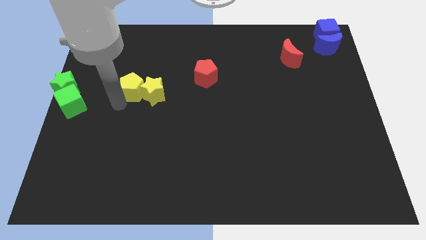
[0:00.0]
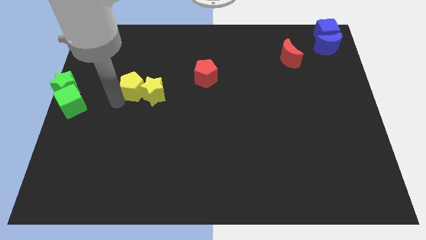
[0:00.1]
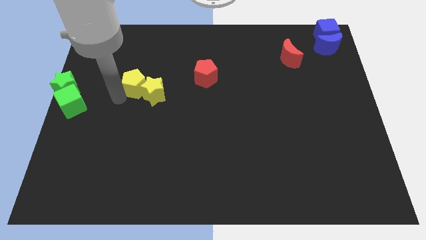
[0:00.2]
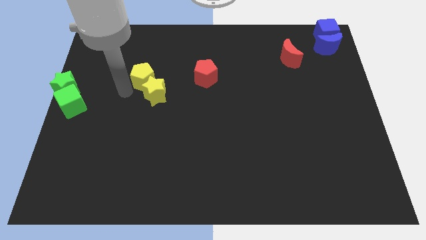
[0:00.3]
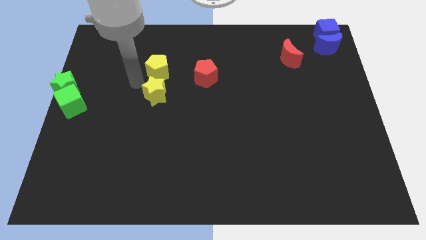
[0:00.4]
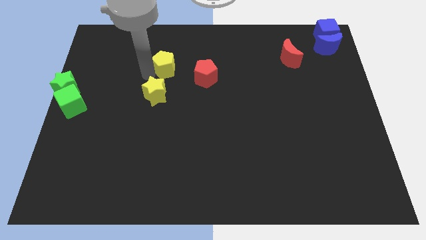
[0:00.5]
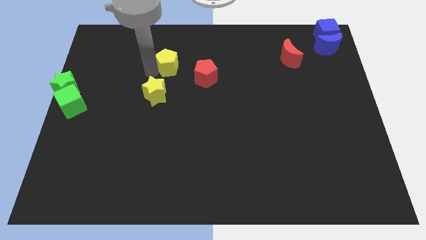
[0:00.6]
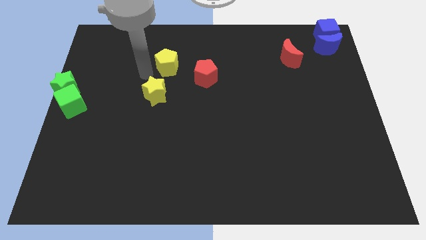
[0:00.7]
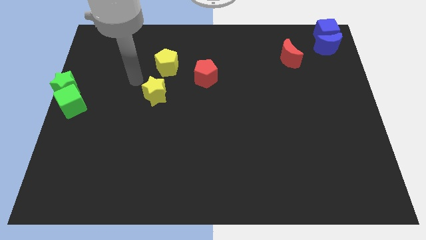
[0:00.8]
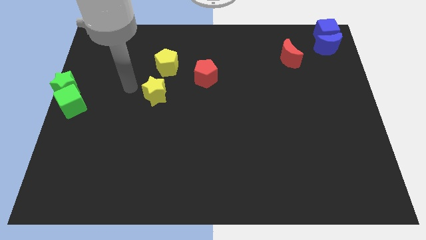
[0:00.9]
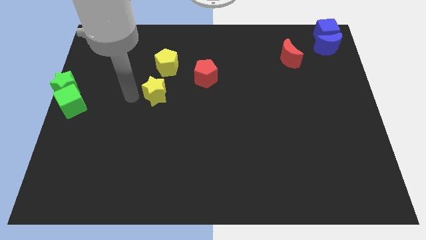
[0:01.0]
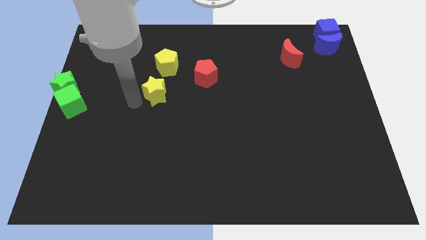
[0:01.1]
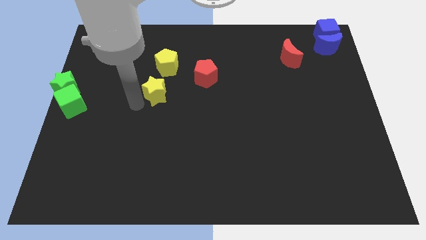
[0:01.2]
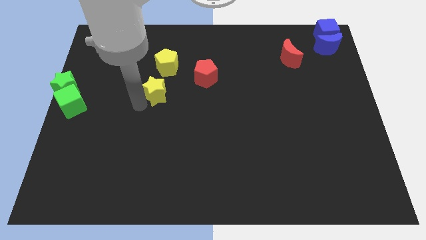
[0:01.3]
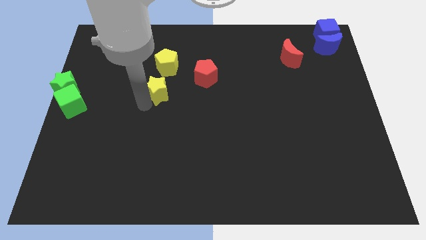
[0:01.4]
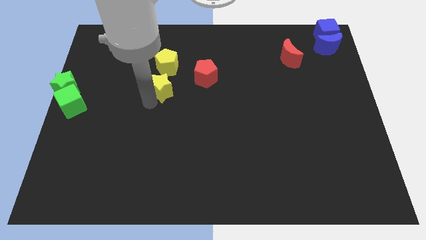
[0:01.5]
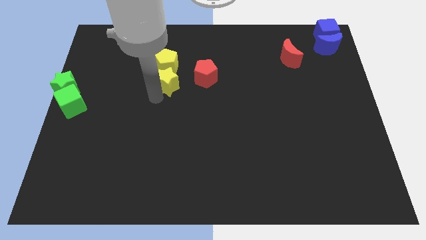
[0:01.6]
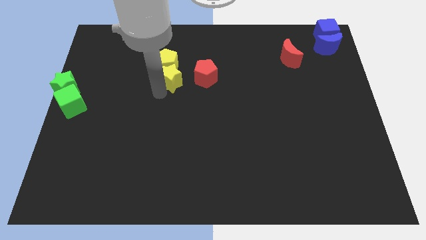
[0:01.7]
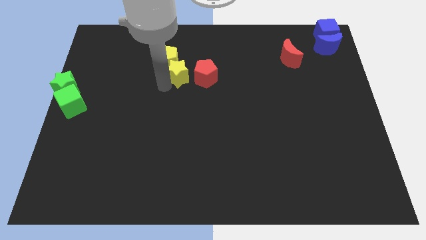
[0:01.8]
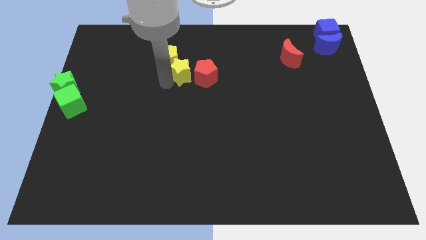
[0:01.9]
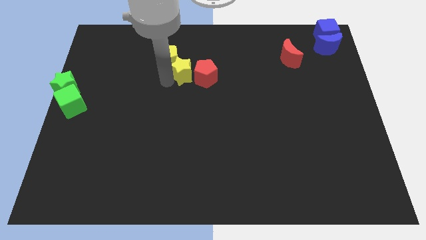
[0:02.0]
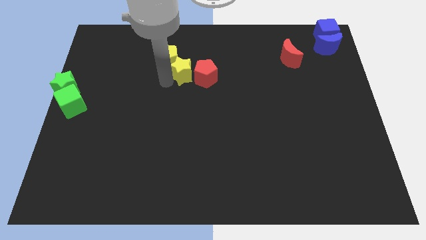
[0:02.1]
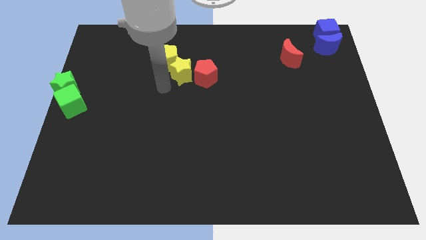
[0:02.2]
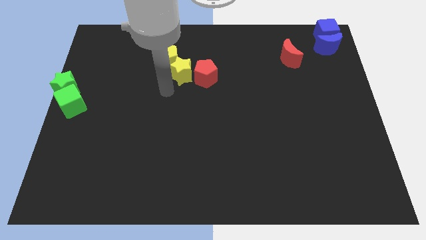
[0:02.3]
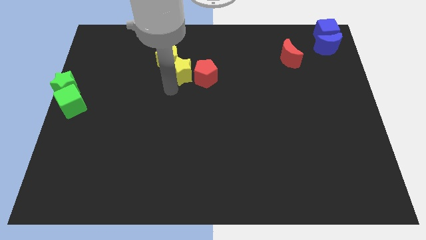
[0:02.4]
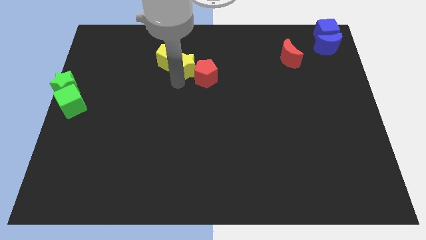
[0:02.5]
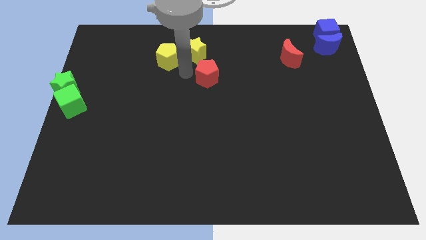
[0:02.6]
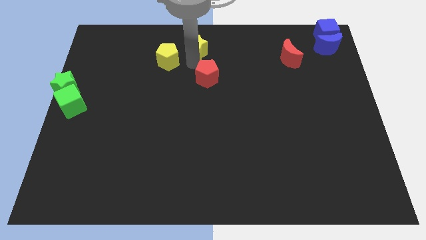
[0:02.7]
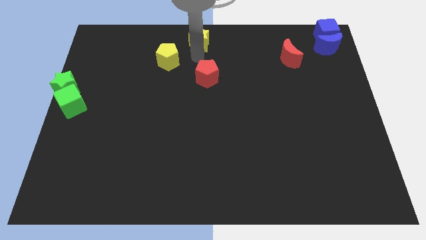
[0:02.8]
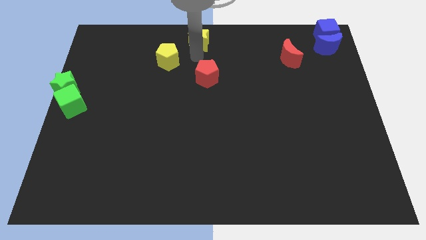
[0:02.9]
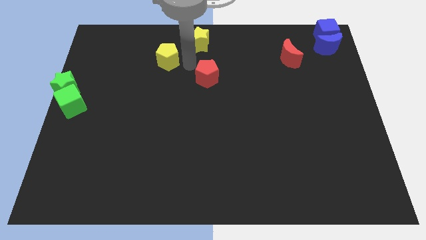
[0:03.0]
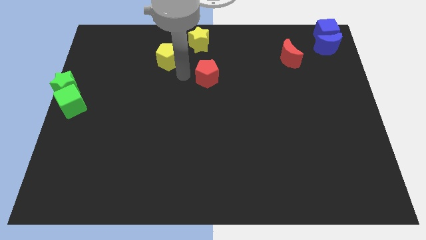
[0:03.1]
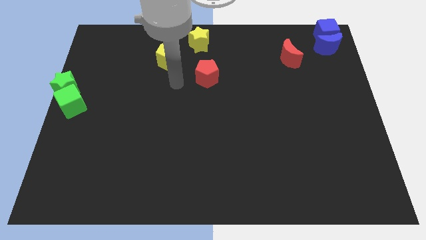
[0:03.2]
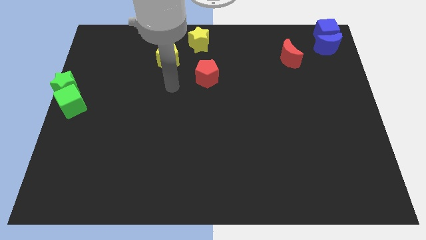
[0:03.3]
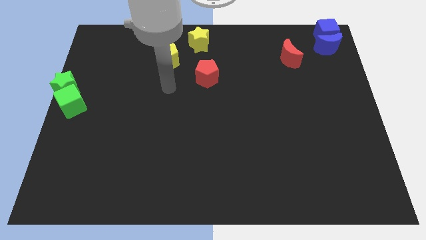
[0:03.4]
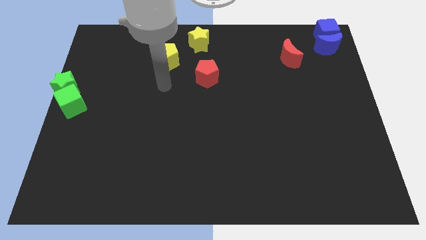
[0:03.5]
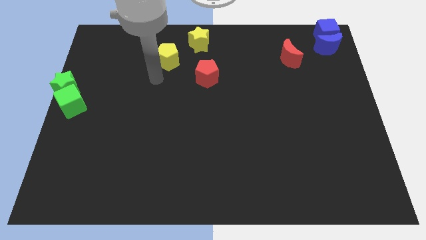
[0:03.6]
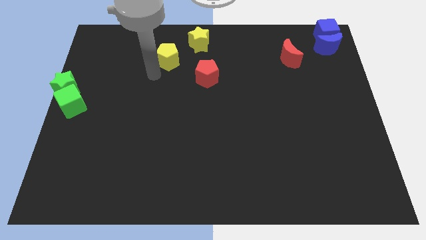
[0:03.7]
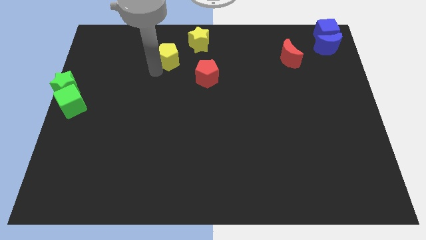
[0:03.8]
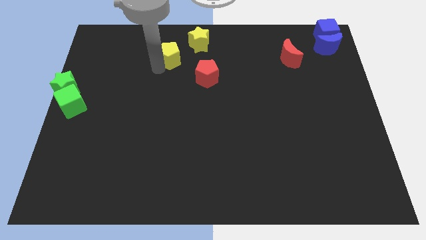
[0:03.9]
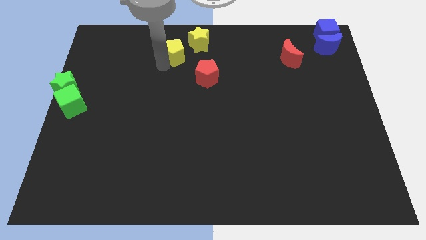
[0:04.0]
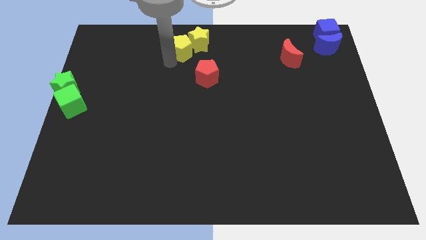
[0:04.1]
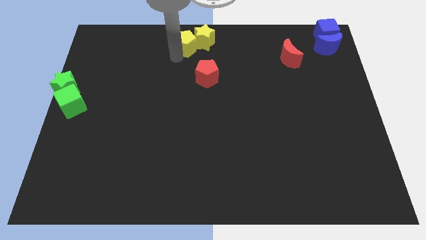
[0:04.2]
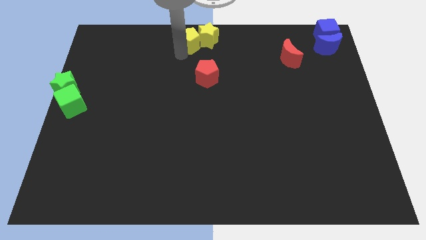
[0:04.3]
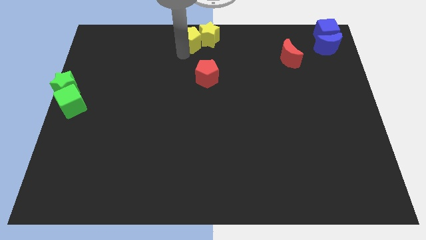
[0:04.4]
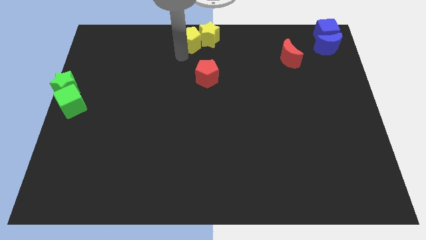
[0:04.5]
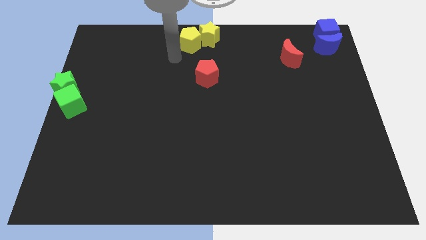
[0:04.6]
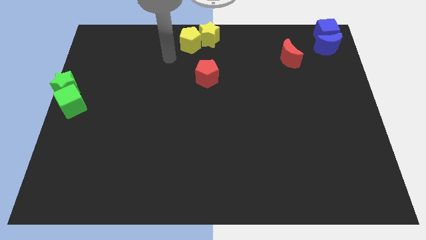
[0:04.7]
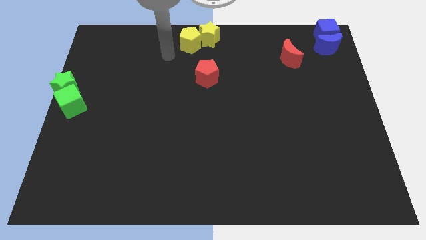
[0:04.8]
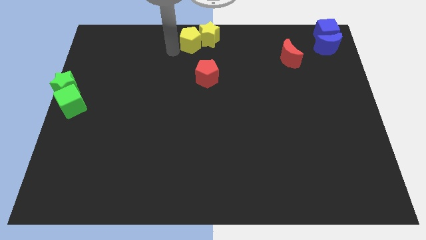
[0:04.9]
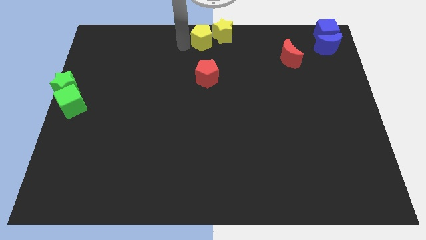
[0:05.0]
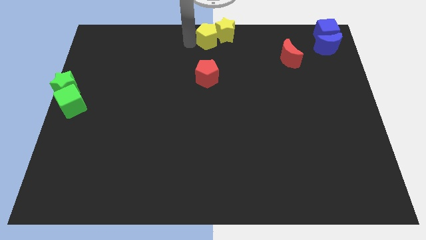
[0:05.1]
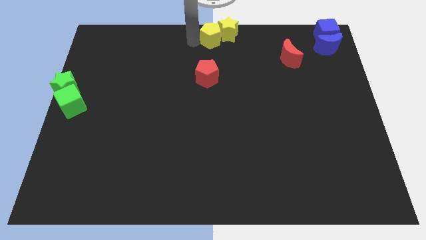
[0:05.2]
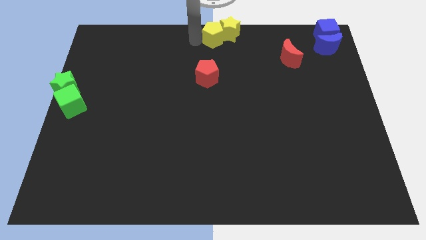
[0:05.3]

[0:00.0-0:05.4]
move the group of yellow blocks at the top center of the board

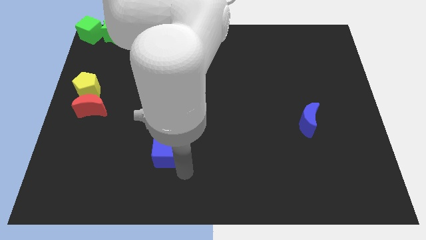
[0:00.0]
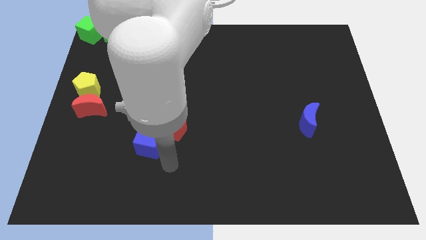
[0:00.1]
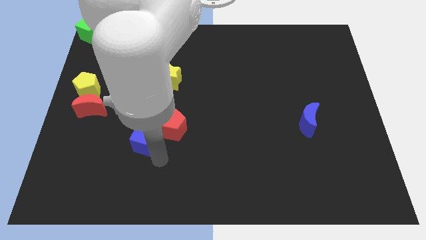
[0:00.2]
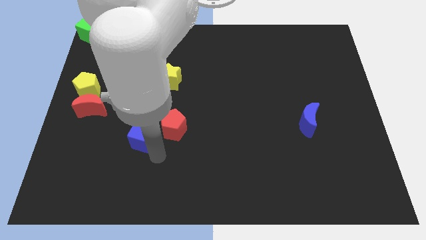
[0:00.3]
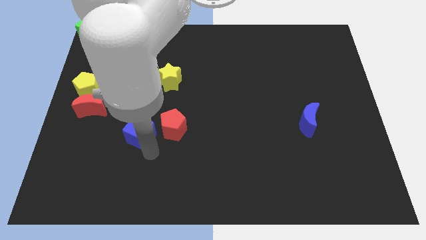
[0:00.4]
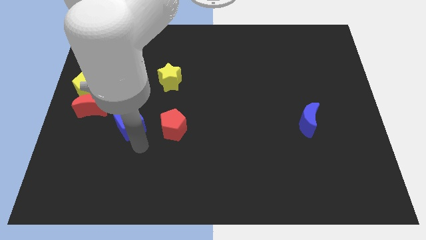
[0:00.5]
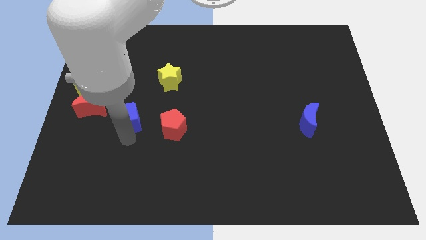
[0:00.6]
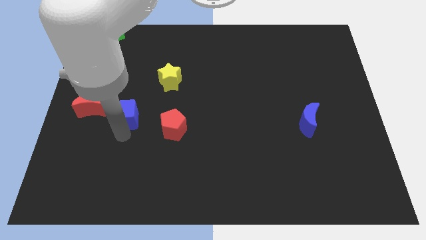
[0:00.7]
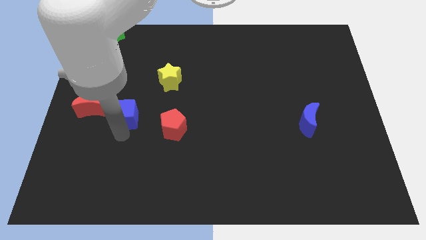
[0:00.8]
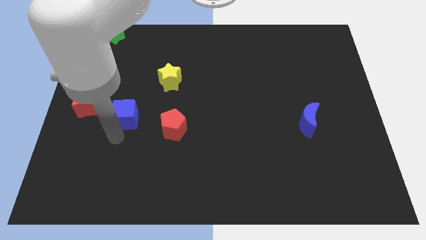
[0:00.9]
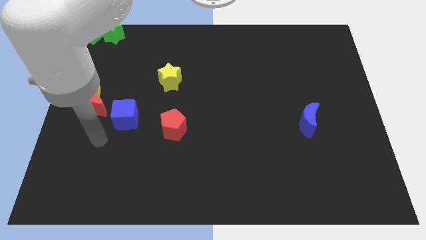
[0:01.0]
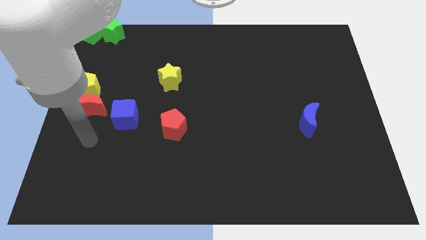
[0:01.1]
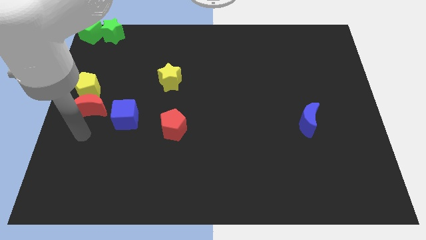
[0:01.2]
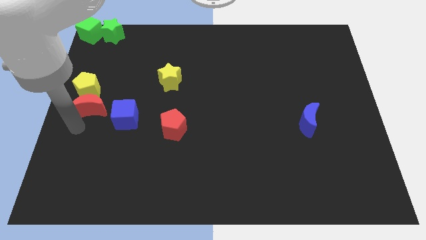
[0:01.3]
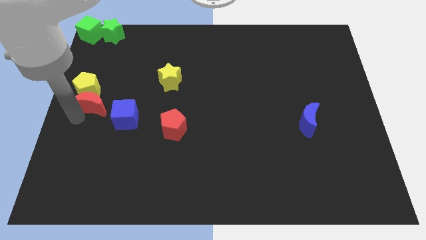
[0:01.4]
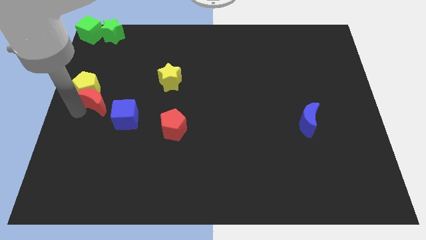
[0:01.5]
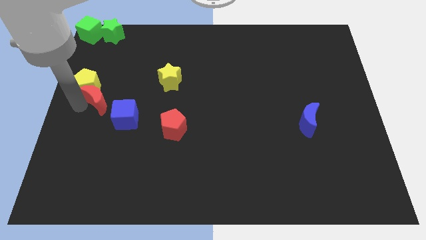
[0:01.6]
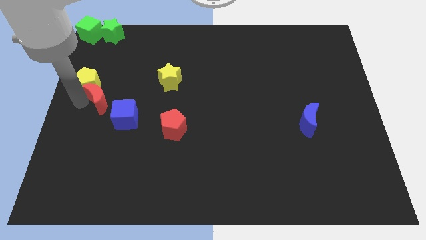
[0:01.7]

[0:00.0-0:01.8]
separate the blue cube from the red pentagon

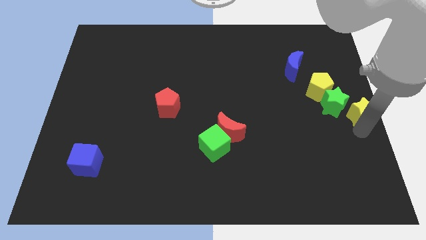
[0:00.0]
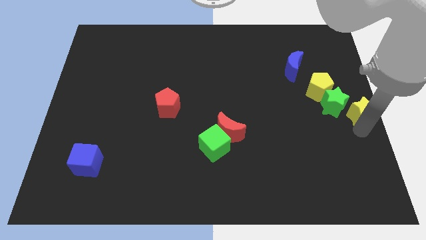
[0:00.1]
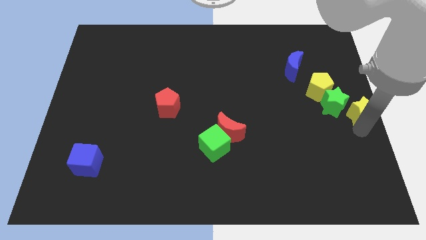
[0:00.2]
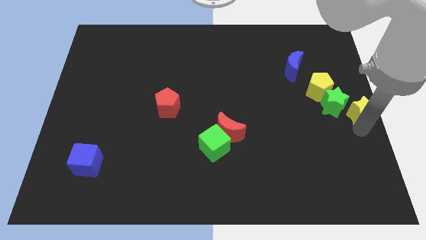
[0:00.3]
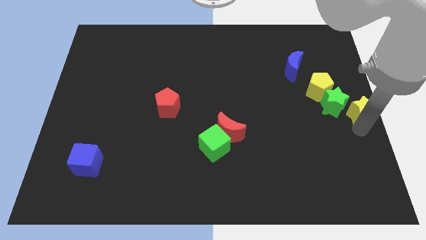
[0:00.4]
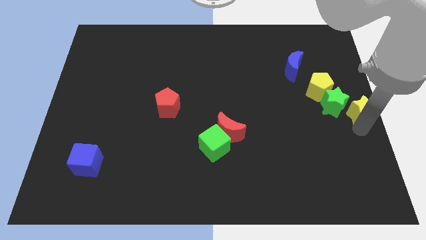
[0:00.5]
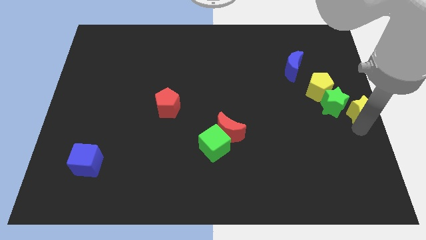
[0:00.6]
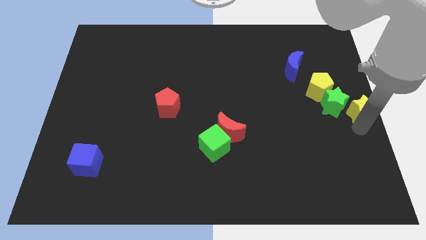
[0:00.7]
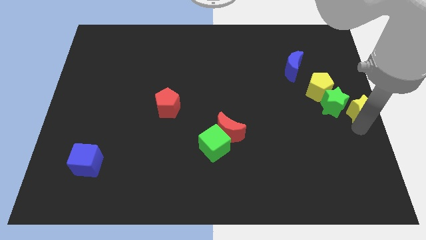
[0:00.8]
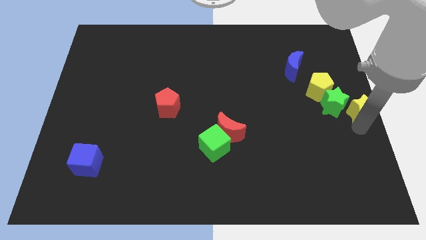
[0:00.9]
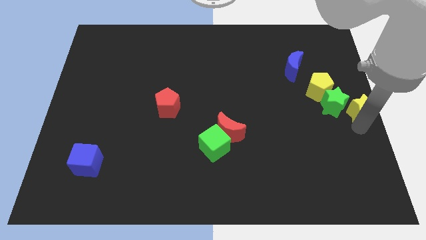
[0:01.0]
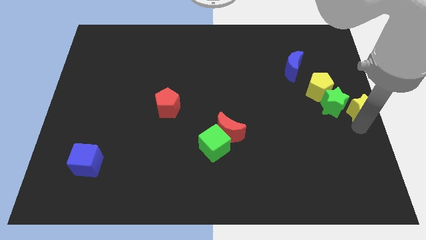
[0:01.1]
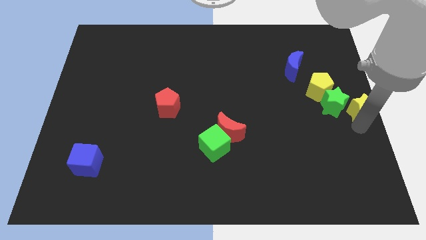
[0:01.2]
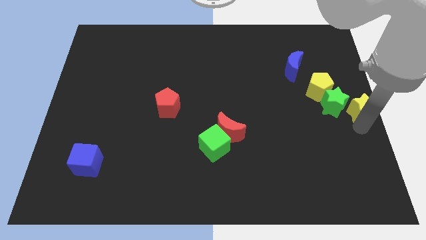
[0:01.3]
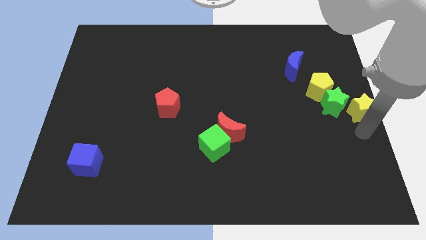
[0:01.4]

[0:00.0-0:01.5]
place the yellow star parallel right to the green star
